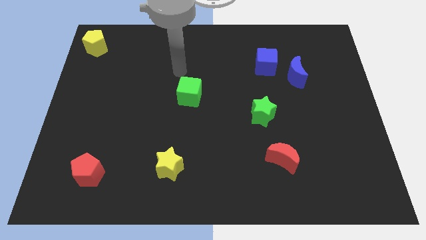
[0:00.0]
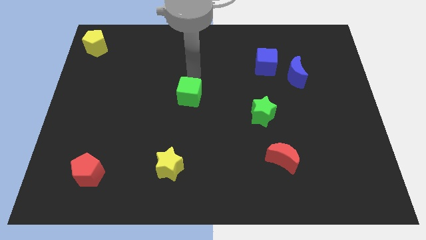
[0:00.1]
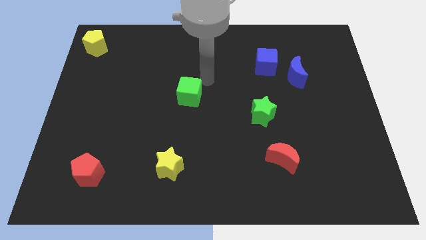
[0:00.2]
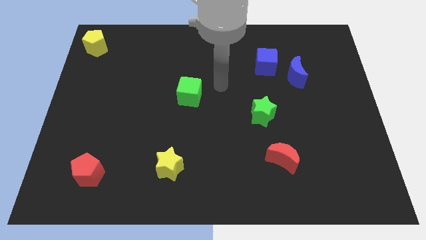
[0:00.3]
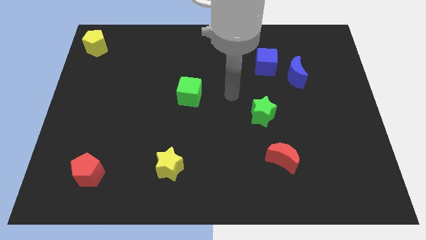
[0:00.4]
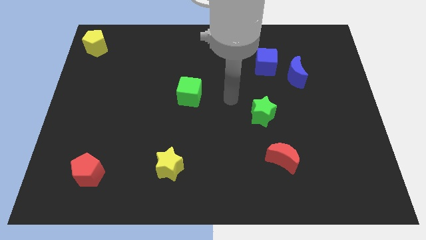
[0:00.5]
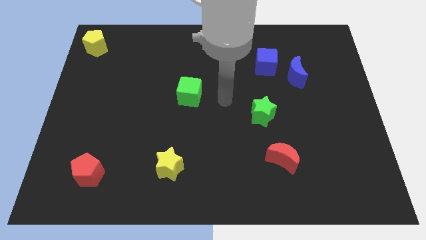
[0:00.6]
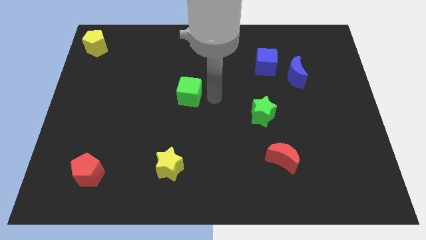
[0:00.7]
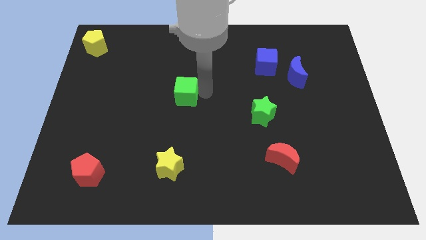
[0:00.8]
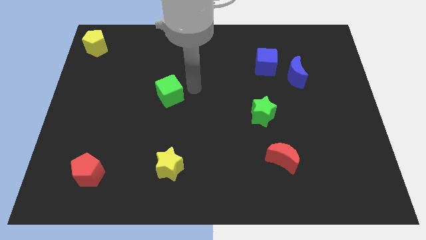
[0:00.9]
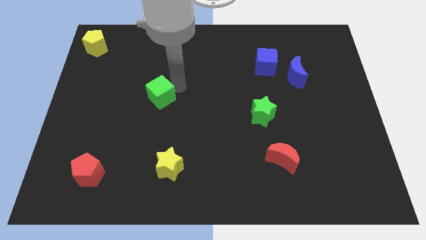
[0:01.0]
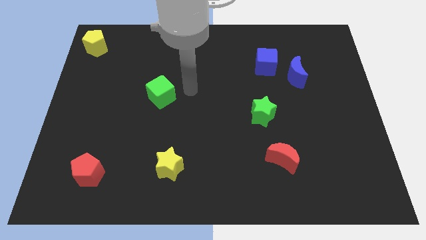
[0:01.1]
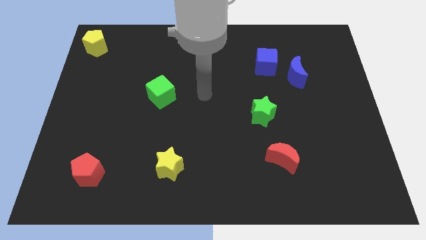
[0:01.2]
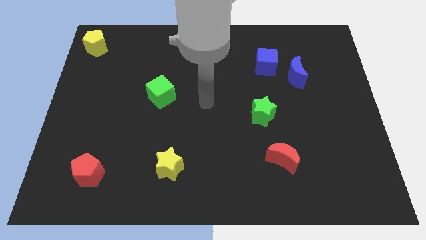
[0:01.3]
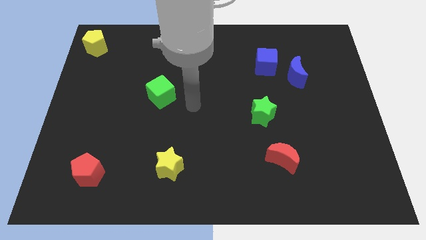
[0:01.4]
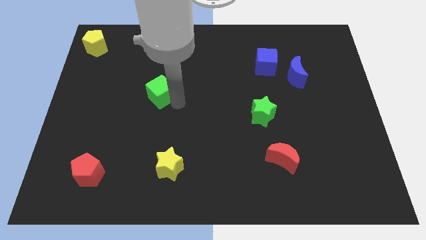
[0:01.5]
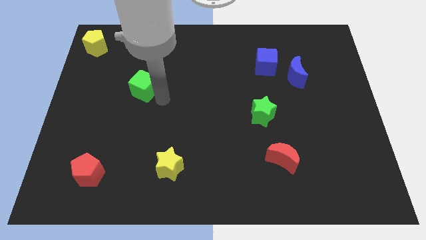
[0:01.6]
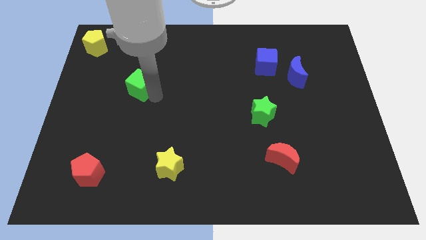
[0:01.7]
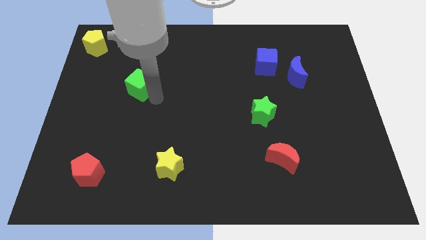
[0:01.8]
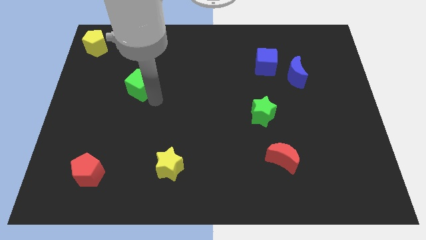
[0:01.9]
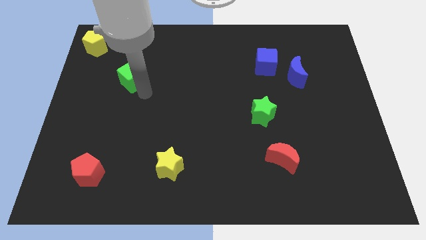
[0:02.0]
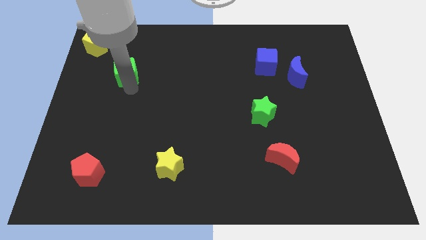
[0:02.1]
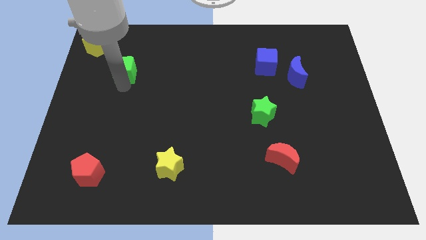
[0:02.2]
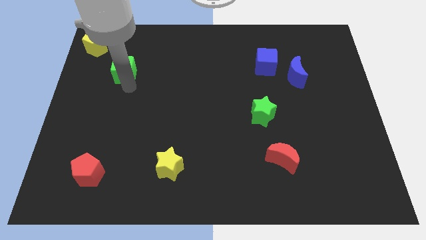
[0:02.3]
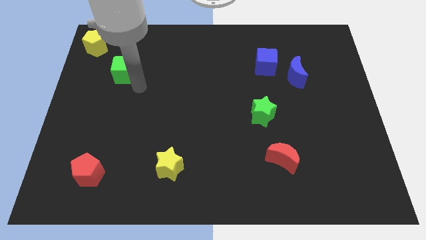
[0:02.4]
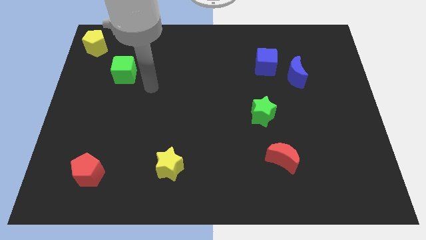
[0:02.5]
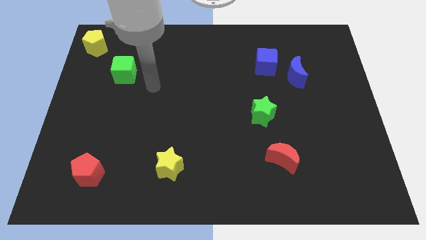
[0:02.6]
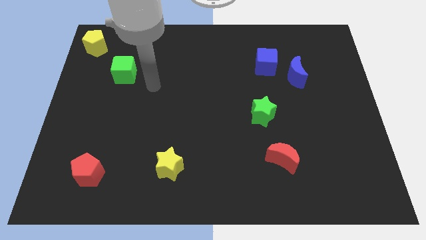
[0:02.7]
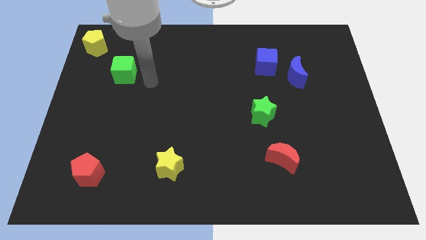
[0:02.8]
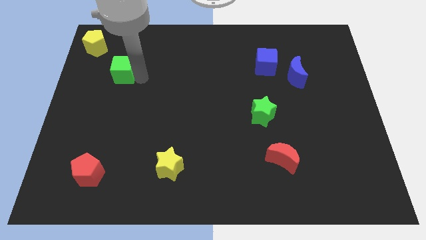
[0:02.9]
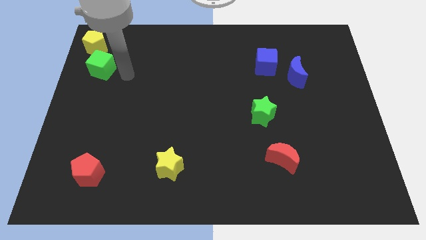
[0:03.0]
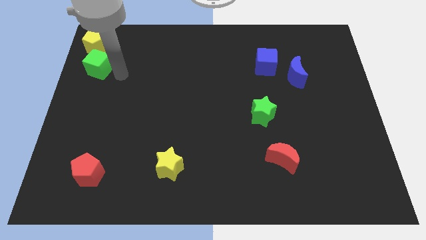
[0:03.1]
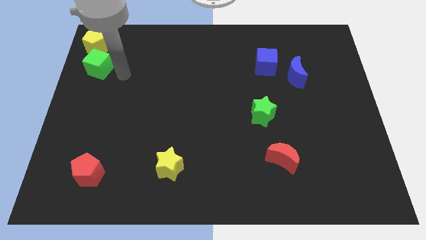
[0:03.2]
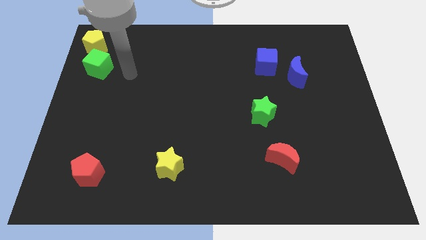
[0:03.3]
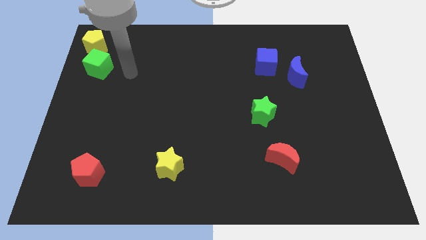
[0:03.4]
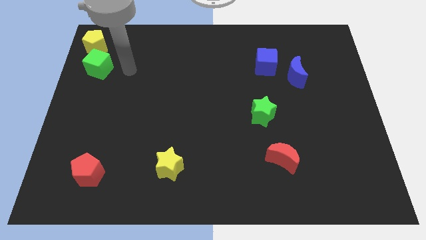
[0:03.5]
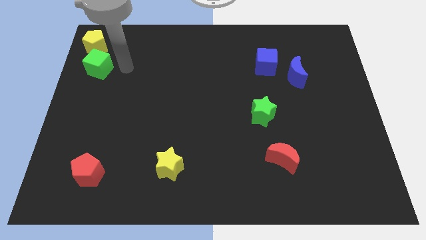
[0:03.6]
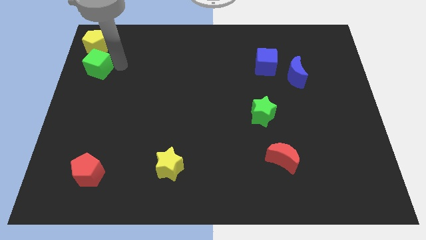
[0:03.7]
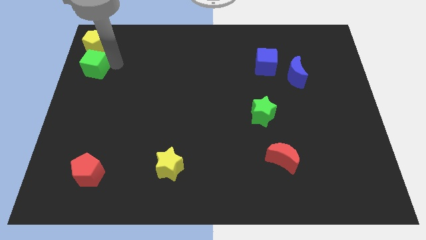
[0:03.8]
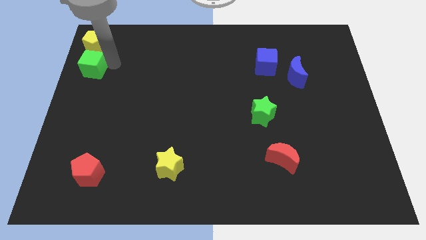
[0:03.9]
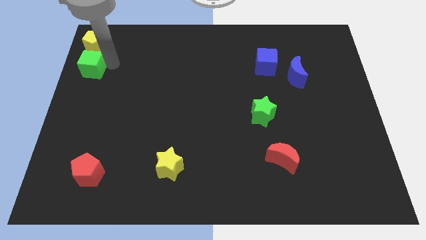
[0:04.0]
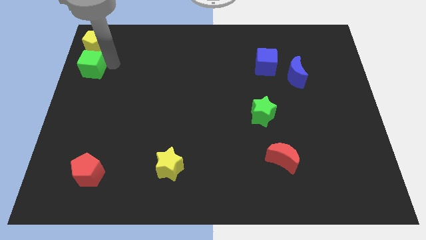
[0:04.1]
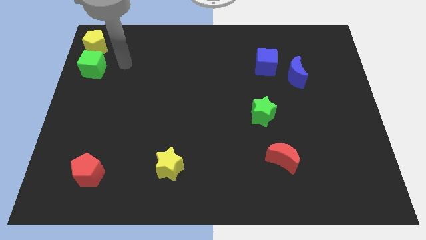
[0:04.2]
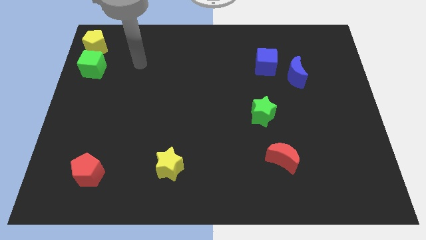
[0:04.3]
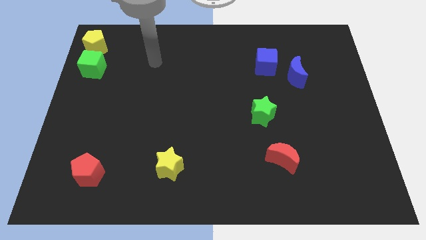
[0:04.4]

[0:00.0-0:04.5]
place the green cube below the yellow pentagon

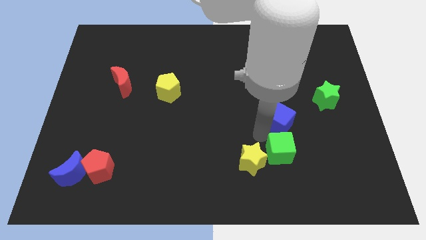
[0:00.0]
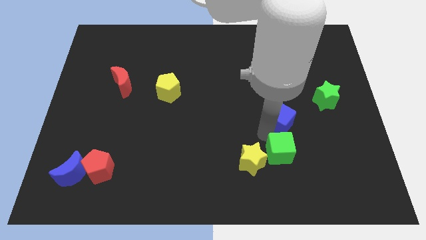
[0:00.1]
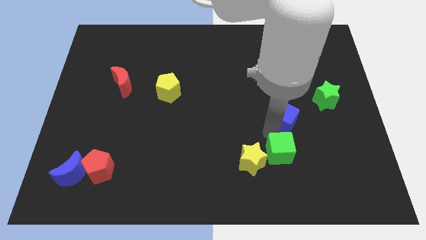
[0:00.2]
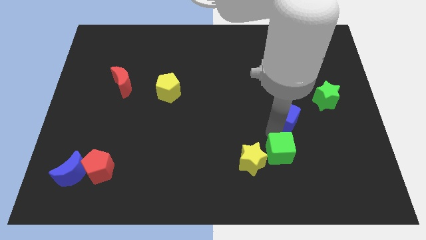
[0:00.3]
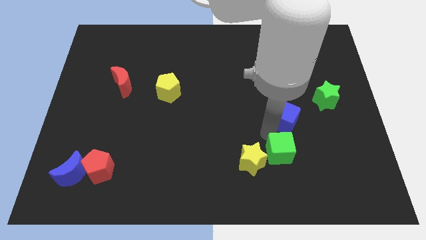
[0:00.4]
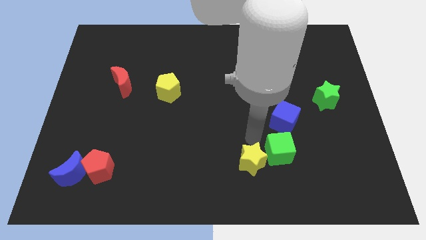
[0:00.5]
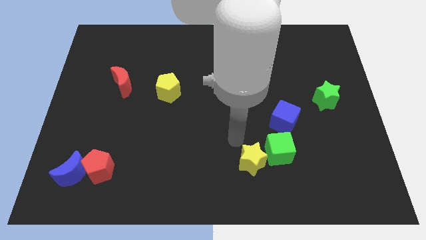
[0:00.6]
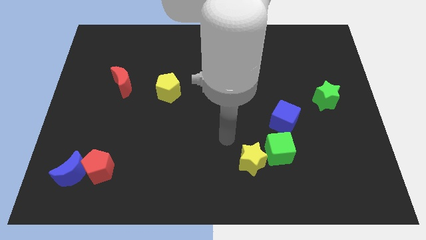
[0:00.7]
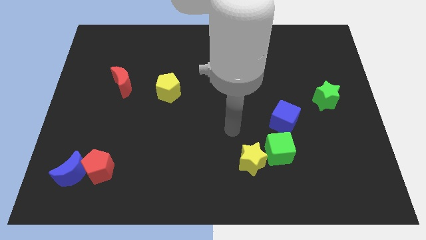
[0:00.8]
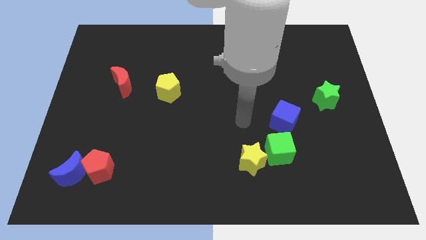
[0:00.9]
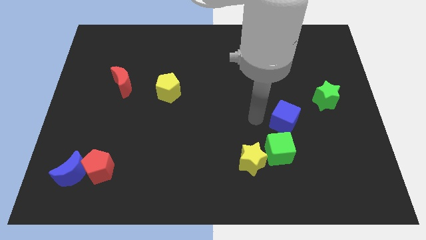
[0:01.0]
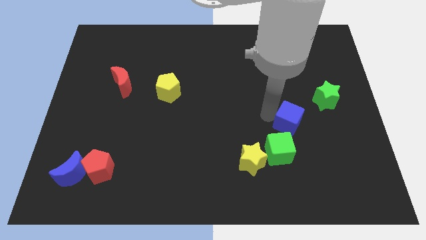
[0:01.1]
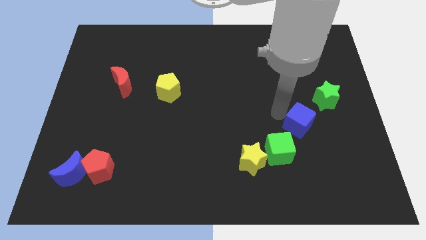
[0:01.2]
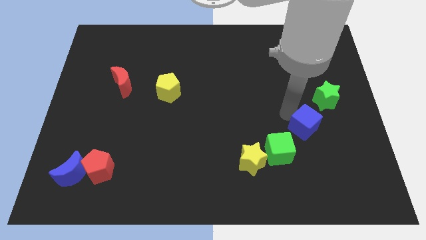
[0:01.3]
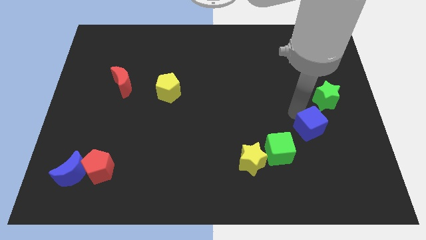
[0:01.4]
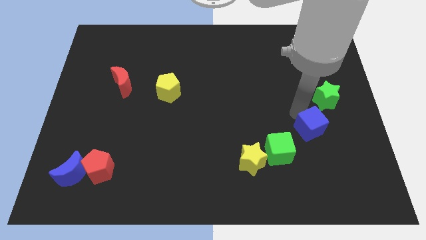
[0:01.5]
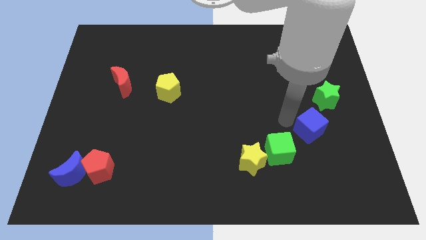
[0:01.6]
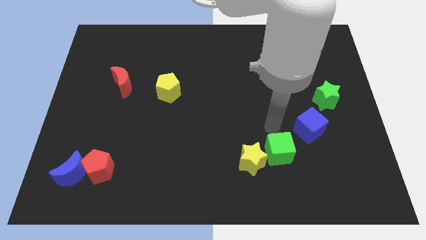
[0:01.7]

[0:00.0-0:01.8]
move the blue cube diagonal to the bottom left to the green star

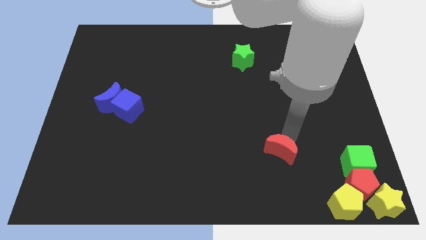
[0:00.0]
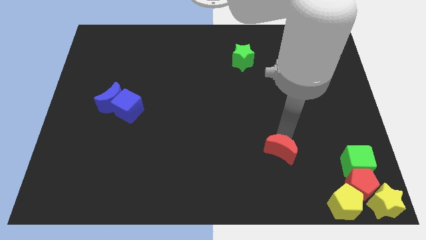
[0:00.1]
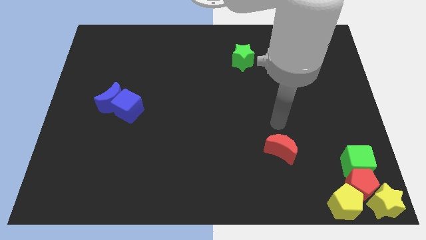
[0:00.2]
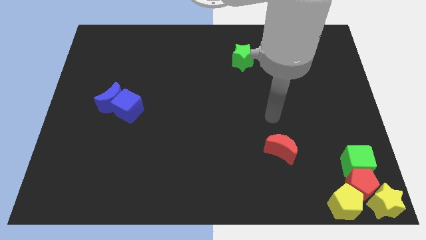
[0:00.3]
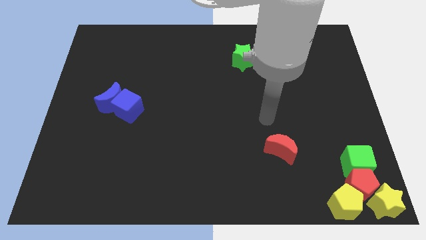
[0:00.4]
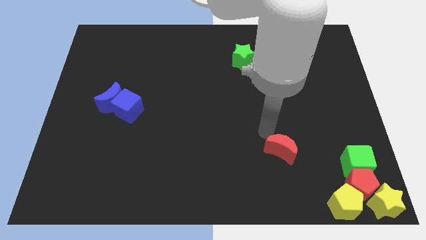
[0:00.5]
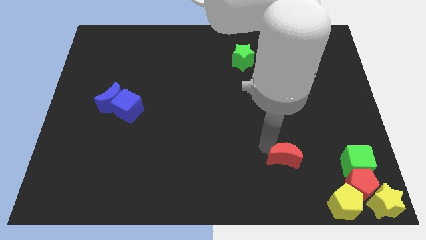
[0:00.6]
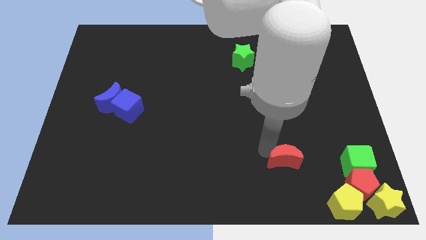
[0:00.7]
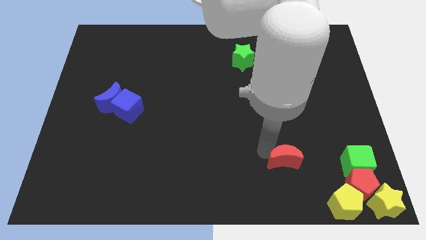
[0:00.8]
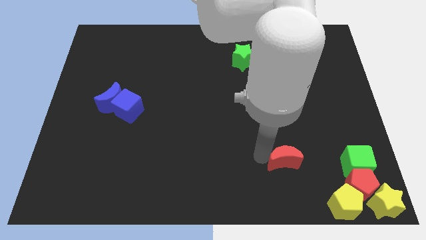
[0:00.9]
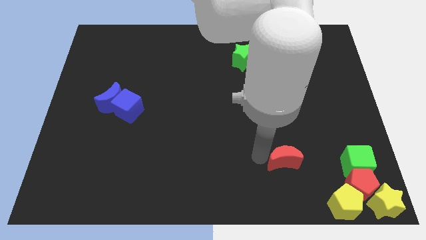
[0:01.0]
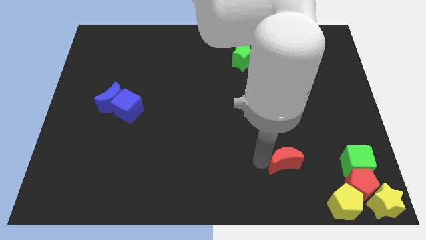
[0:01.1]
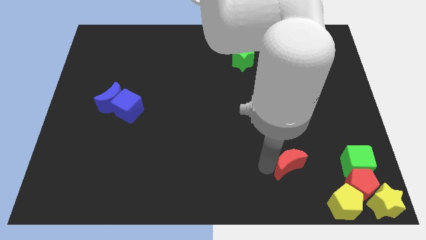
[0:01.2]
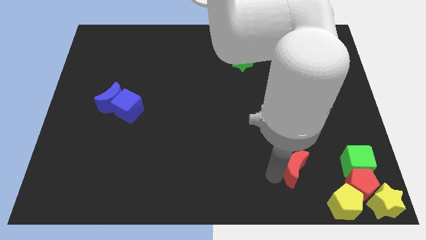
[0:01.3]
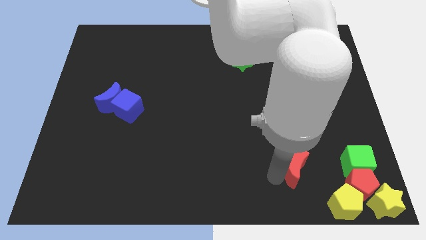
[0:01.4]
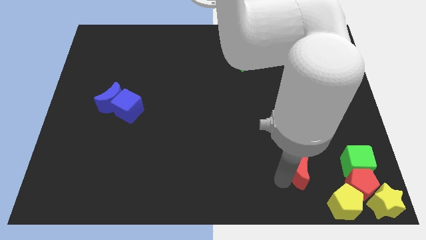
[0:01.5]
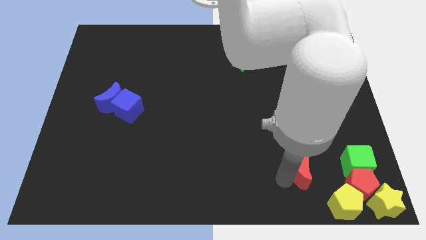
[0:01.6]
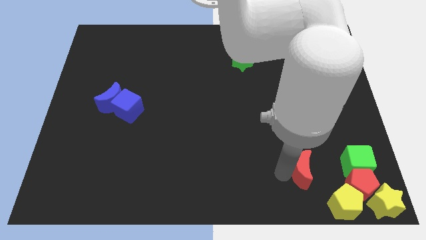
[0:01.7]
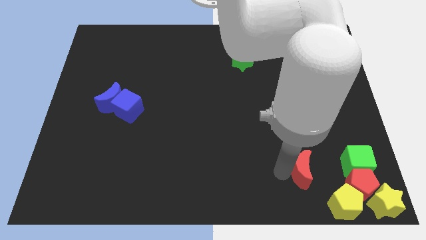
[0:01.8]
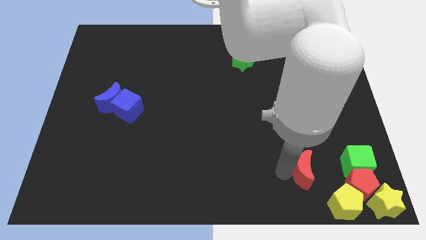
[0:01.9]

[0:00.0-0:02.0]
place the red crescent parallel left to the green cube

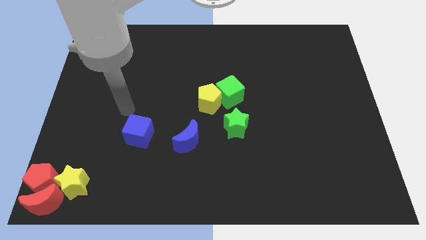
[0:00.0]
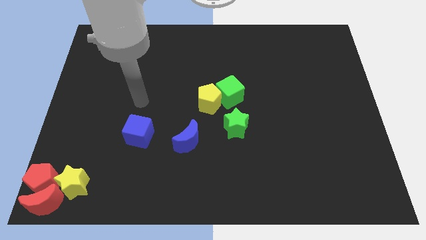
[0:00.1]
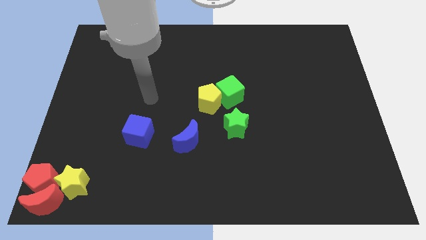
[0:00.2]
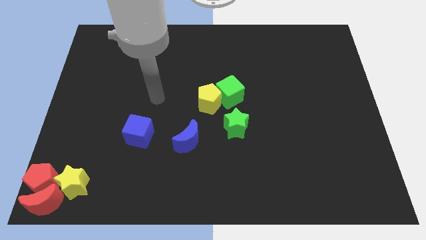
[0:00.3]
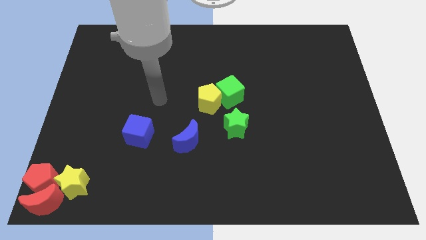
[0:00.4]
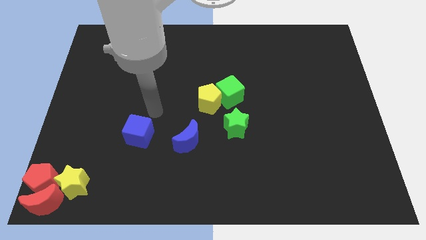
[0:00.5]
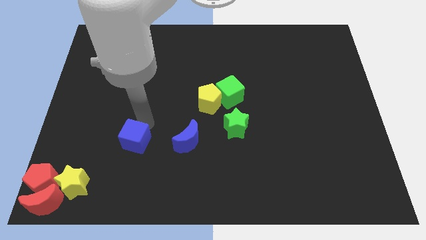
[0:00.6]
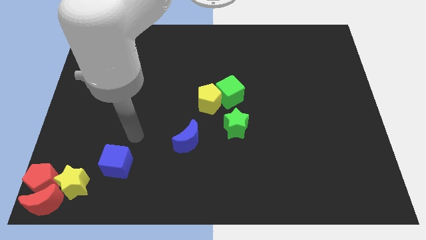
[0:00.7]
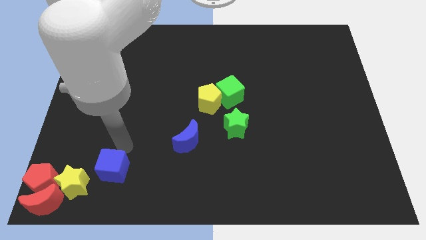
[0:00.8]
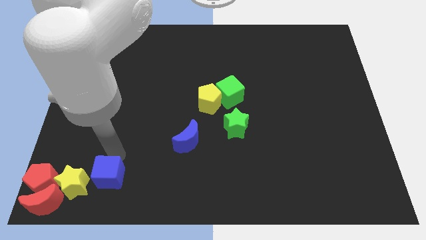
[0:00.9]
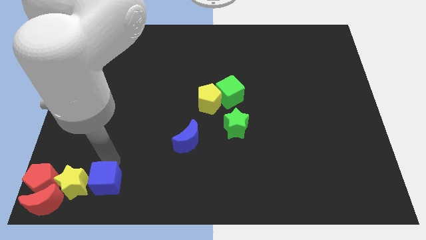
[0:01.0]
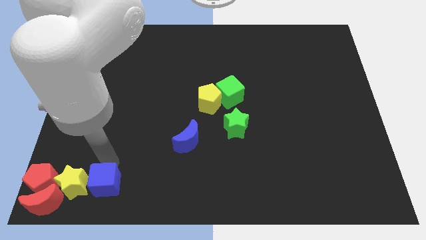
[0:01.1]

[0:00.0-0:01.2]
place the blue cube right to the yellow star
